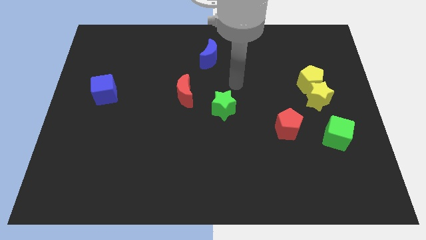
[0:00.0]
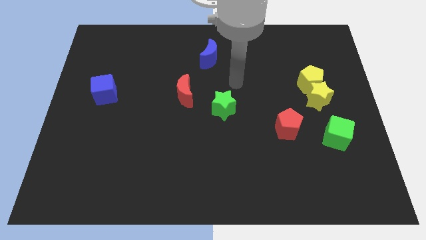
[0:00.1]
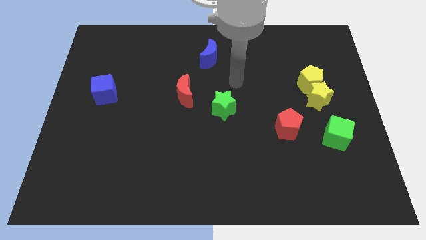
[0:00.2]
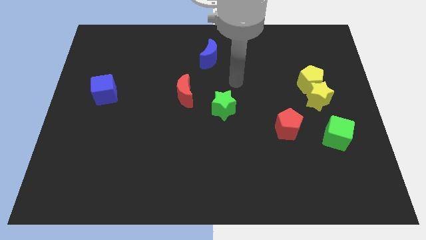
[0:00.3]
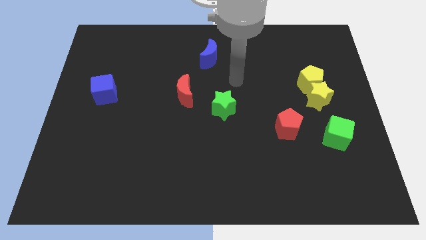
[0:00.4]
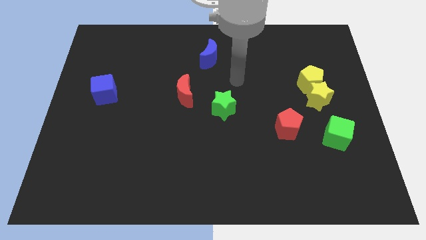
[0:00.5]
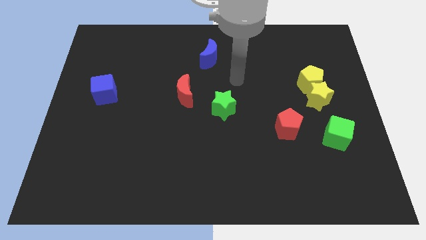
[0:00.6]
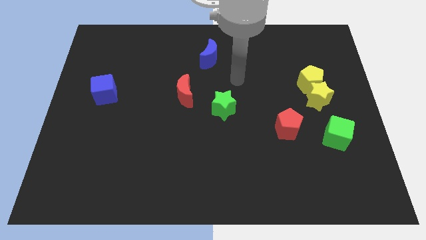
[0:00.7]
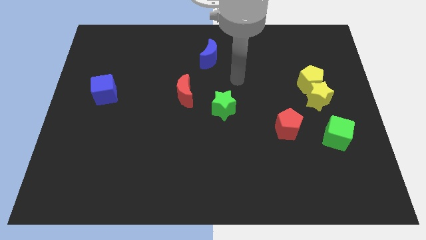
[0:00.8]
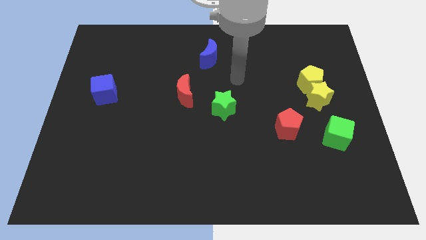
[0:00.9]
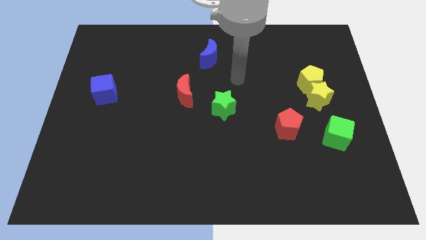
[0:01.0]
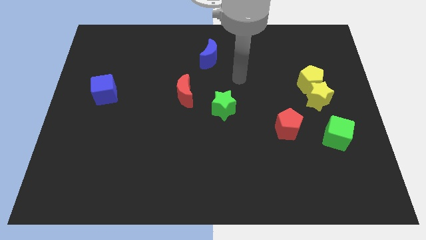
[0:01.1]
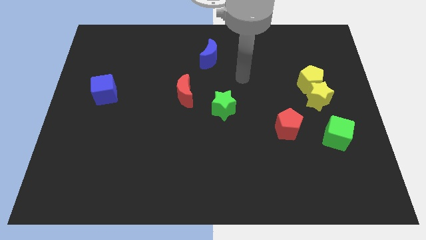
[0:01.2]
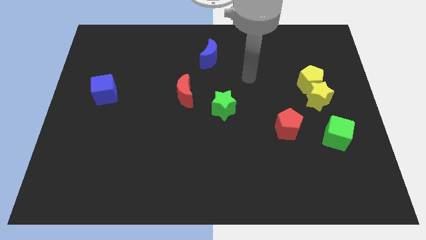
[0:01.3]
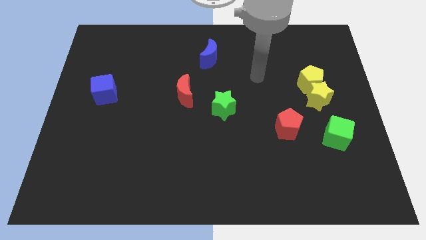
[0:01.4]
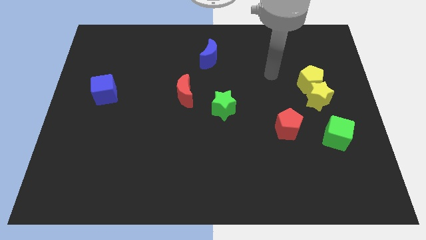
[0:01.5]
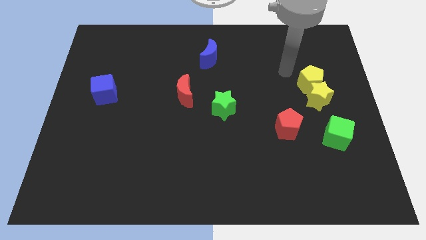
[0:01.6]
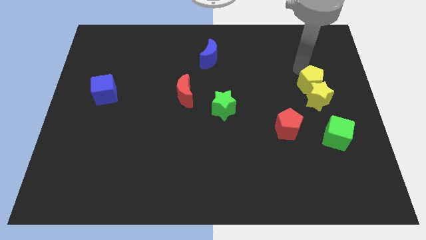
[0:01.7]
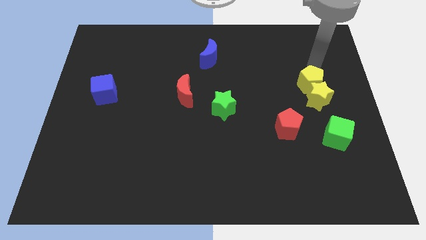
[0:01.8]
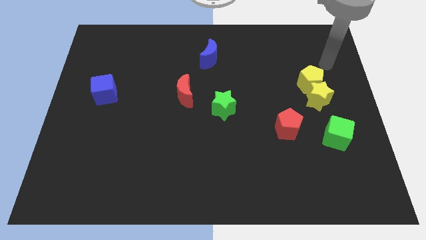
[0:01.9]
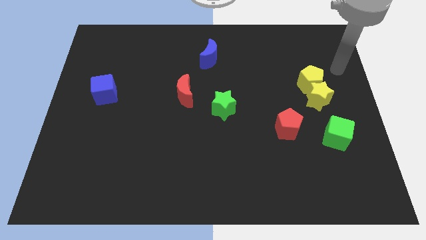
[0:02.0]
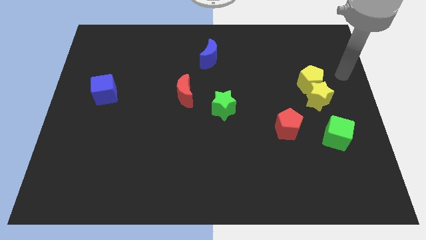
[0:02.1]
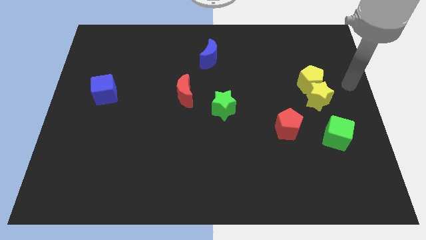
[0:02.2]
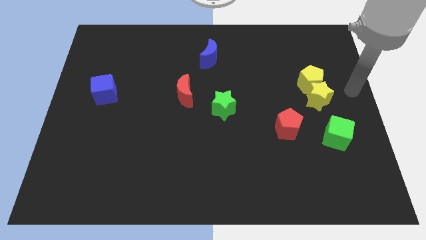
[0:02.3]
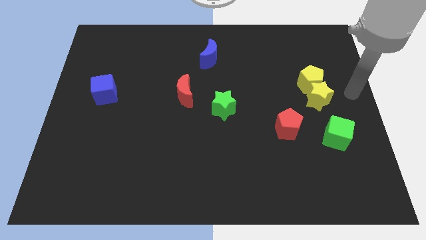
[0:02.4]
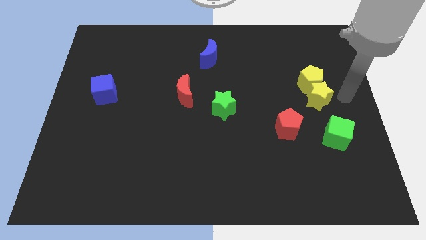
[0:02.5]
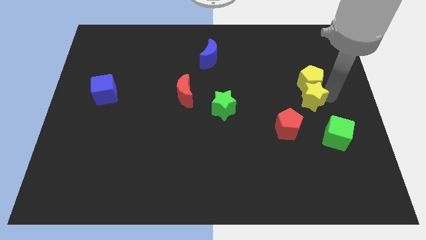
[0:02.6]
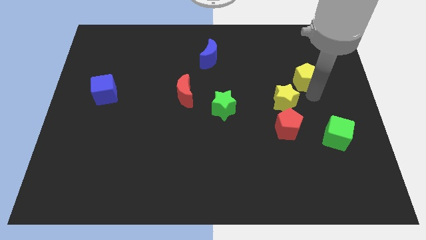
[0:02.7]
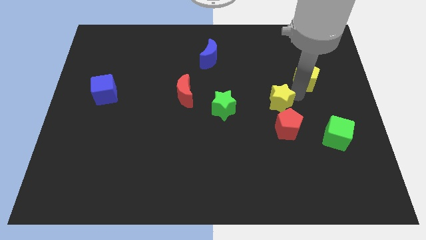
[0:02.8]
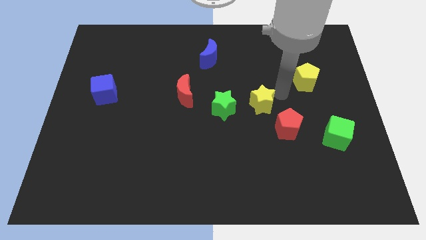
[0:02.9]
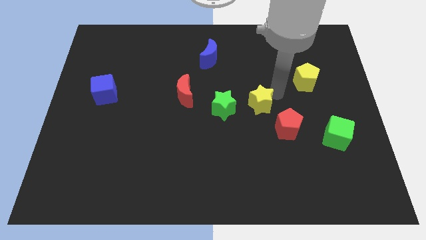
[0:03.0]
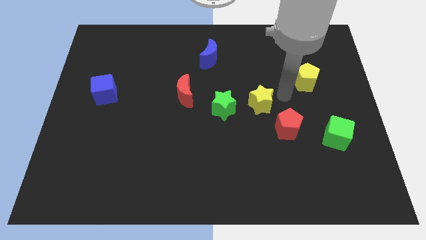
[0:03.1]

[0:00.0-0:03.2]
push the yellow star towards the center

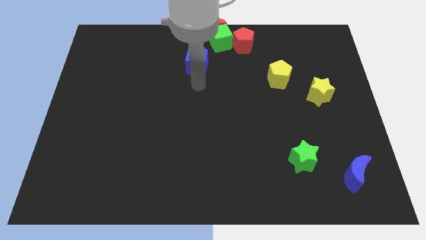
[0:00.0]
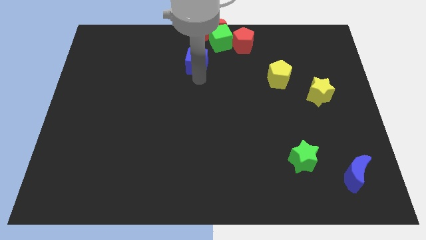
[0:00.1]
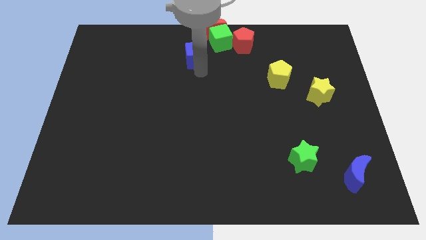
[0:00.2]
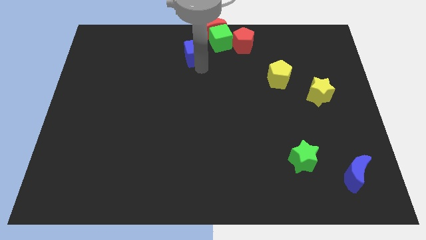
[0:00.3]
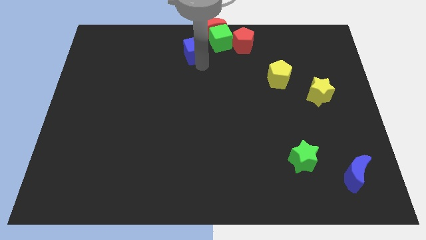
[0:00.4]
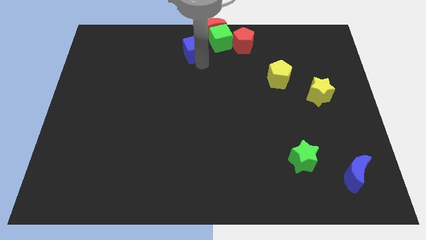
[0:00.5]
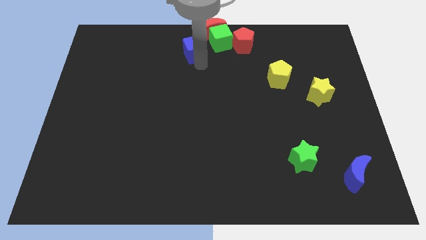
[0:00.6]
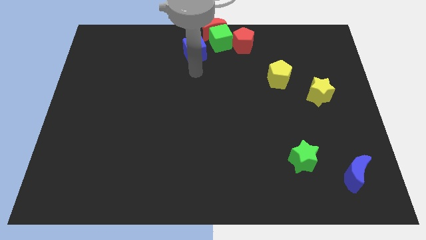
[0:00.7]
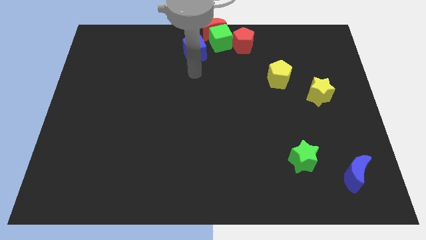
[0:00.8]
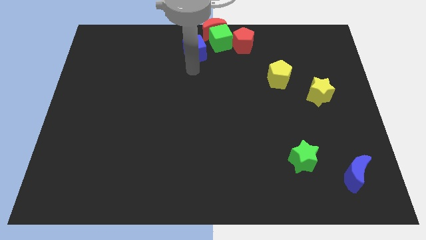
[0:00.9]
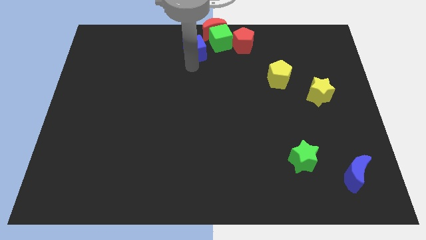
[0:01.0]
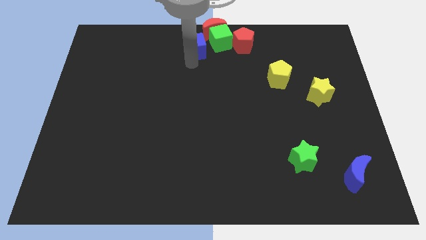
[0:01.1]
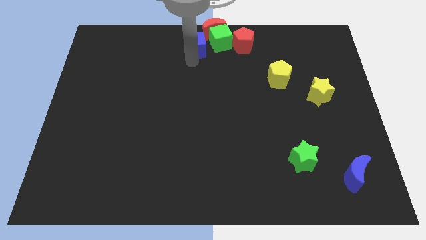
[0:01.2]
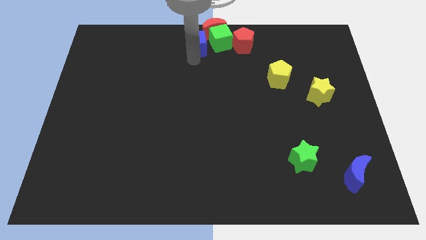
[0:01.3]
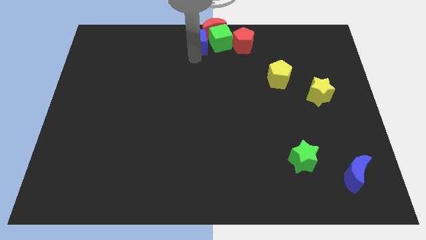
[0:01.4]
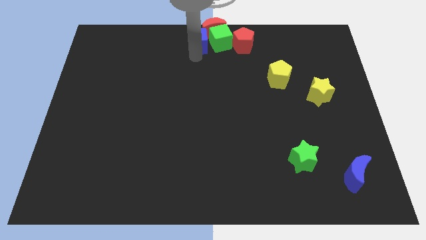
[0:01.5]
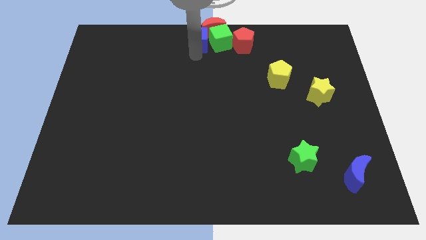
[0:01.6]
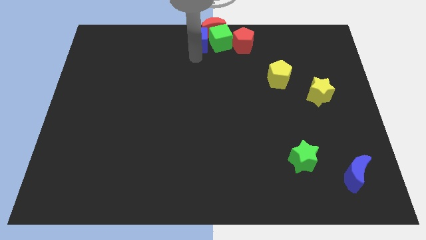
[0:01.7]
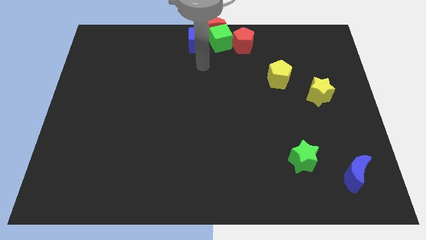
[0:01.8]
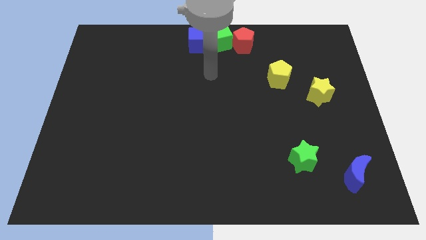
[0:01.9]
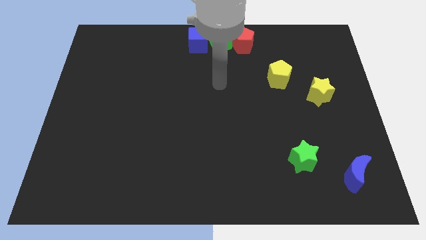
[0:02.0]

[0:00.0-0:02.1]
move the blue cube to the left of the green cube

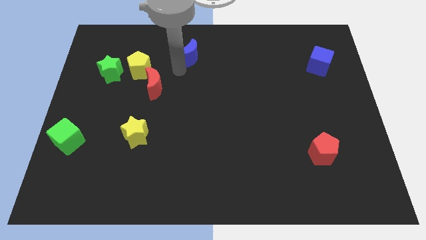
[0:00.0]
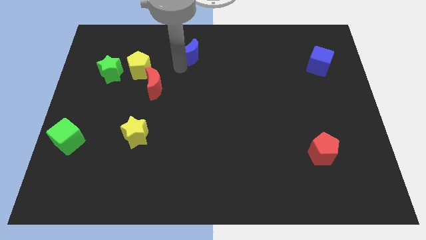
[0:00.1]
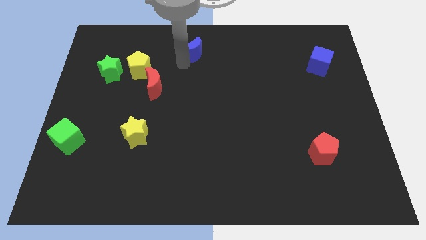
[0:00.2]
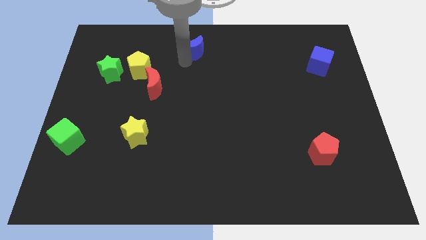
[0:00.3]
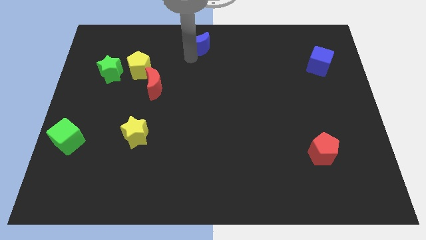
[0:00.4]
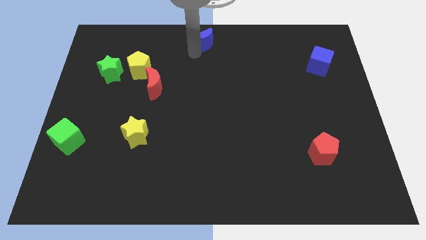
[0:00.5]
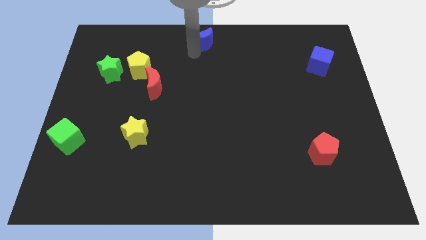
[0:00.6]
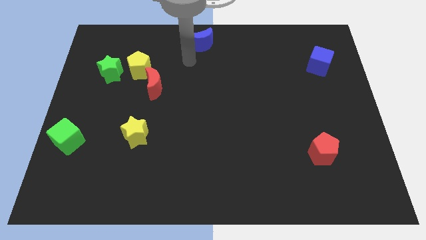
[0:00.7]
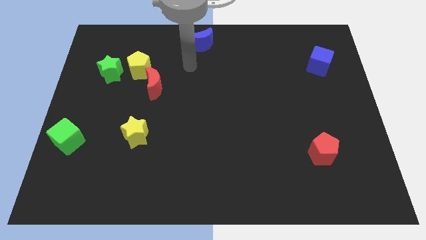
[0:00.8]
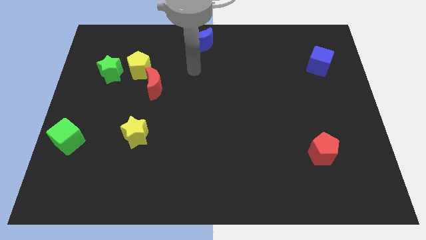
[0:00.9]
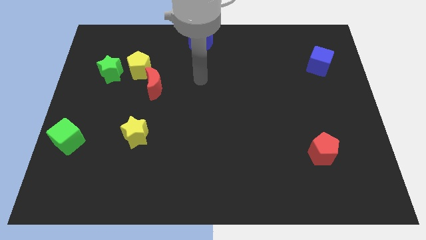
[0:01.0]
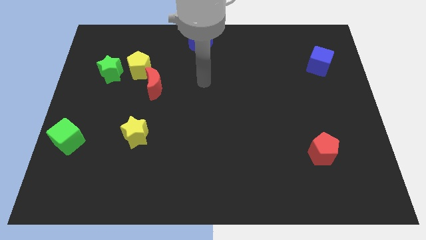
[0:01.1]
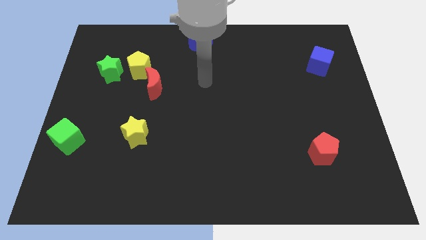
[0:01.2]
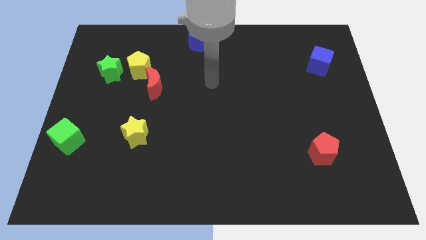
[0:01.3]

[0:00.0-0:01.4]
move the blue crescent at the top center

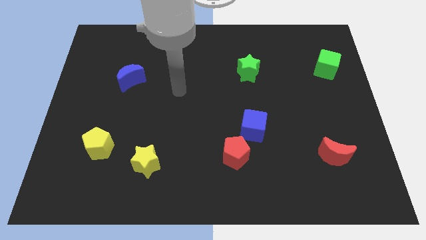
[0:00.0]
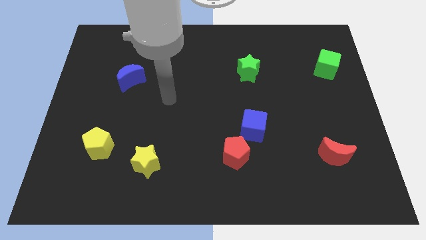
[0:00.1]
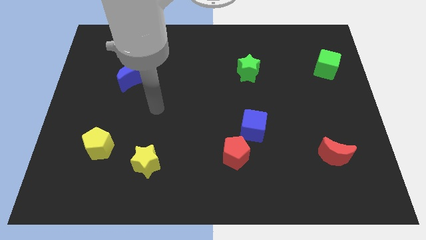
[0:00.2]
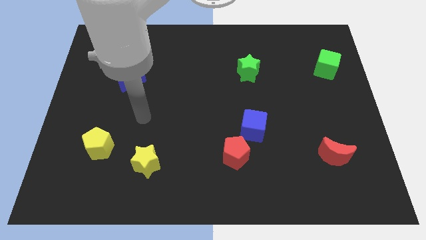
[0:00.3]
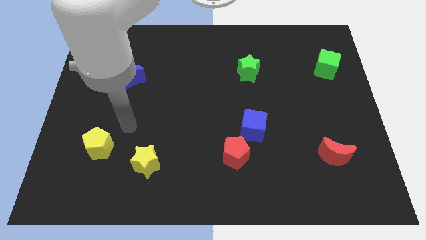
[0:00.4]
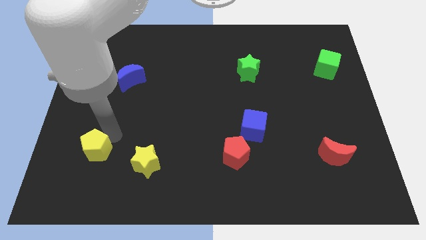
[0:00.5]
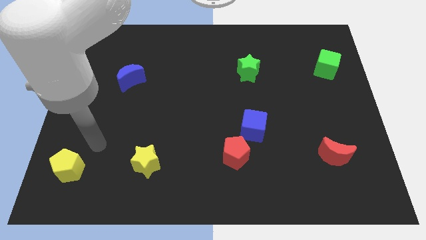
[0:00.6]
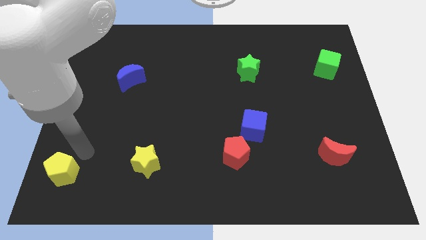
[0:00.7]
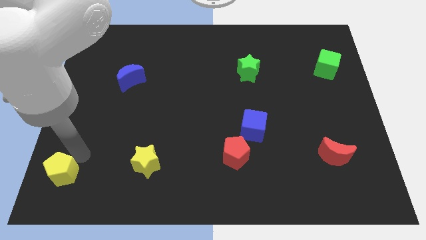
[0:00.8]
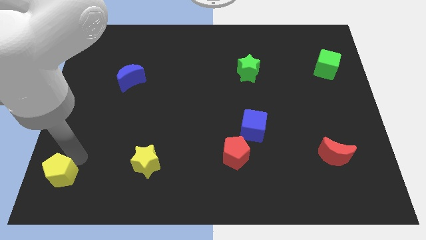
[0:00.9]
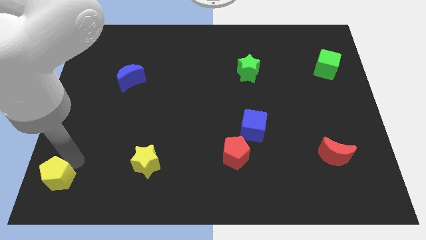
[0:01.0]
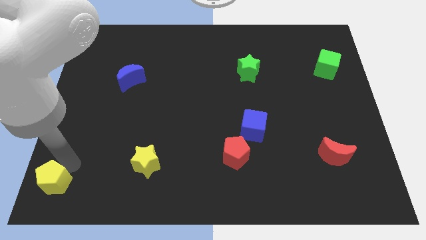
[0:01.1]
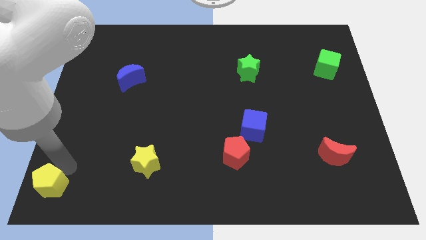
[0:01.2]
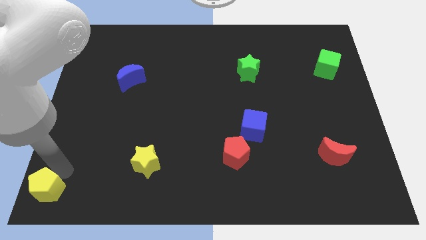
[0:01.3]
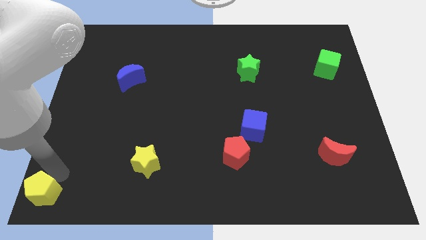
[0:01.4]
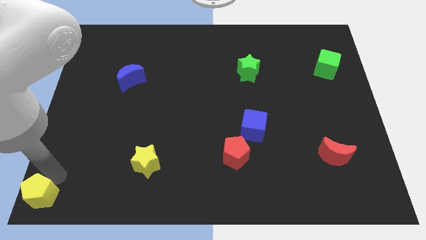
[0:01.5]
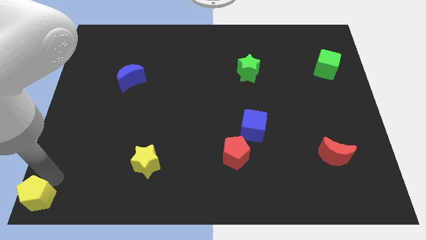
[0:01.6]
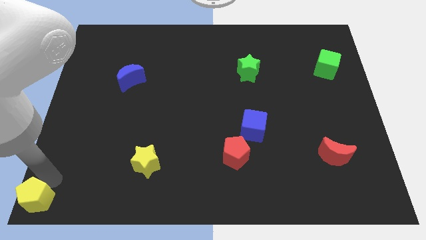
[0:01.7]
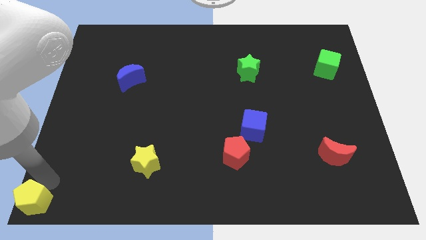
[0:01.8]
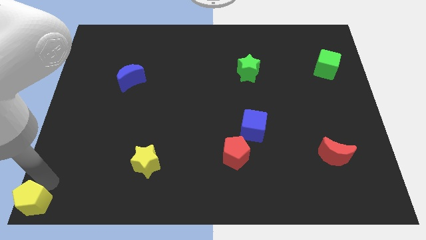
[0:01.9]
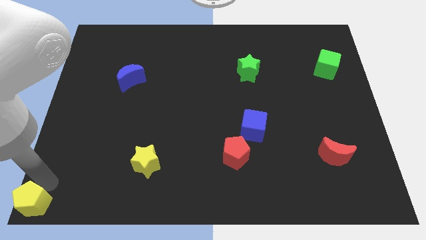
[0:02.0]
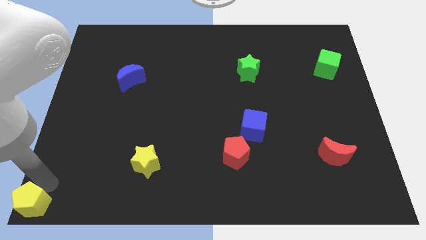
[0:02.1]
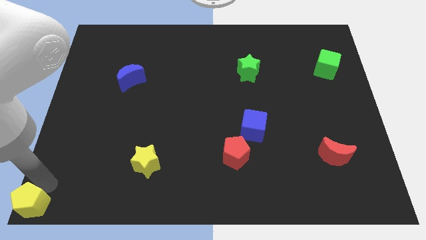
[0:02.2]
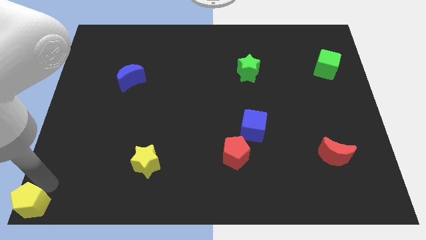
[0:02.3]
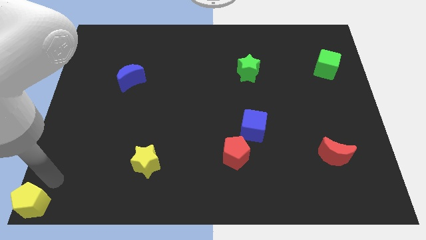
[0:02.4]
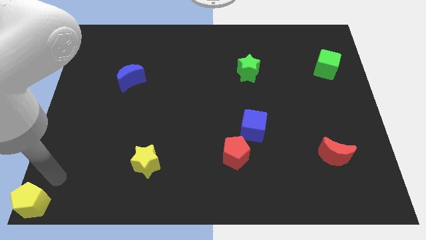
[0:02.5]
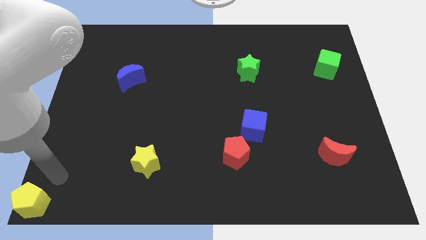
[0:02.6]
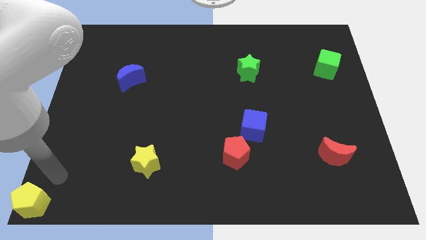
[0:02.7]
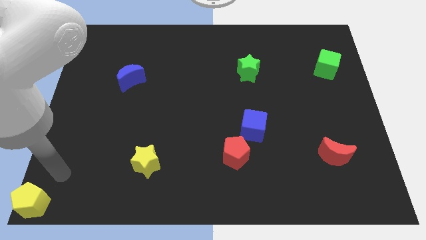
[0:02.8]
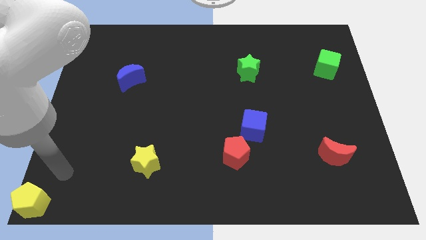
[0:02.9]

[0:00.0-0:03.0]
push the yellow pentagon to the bottom left to the board
